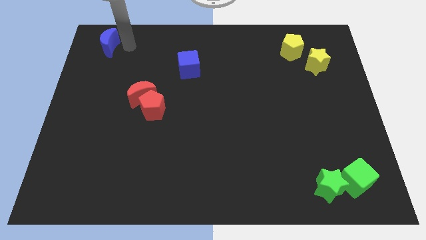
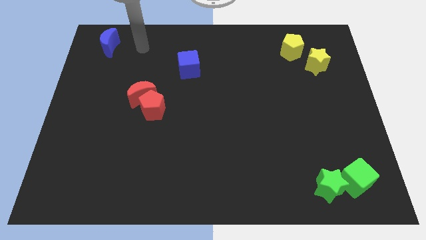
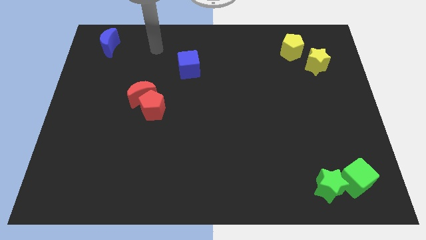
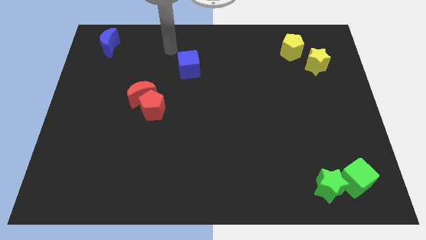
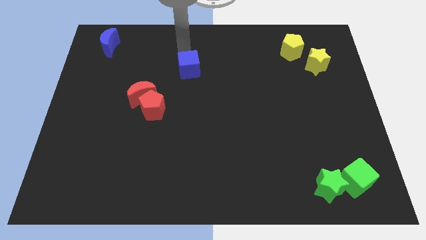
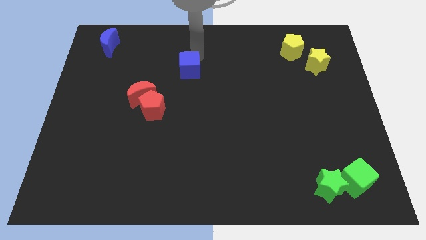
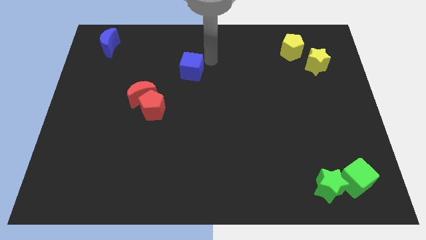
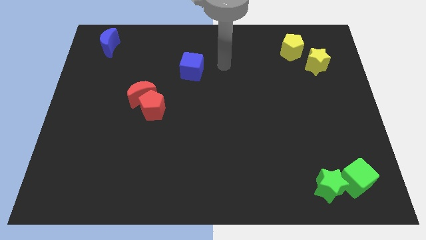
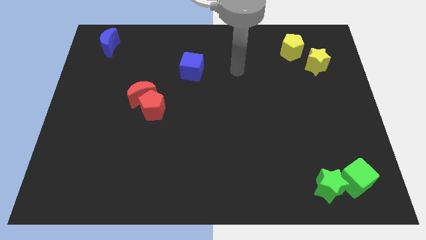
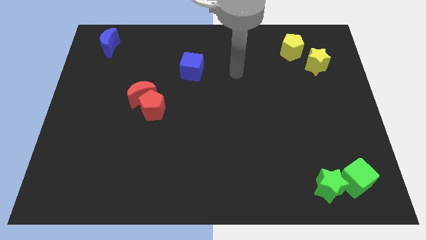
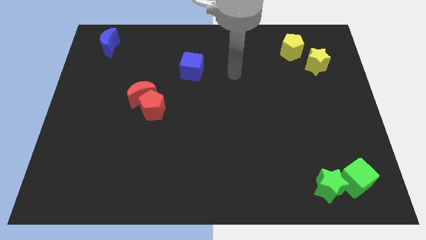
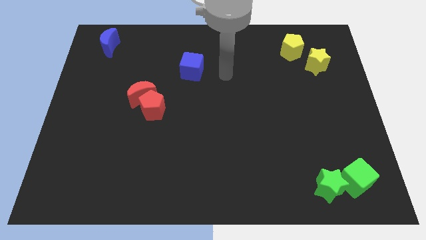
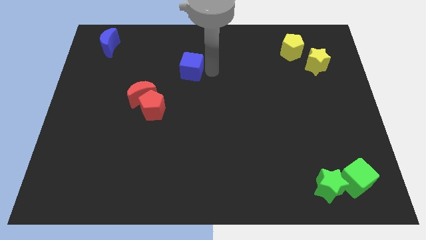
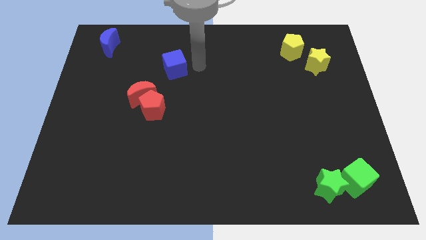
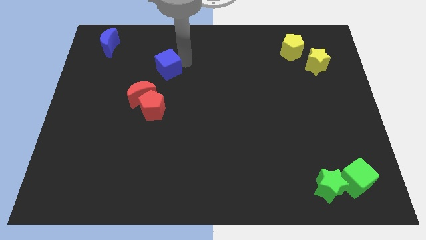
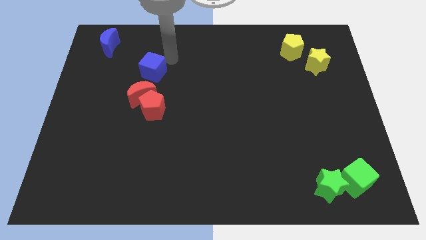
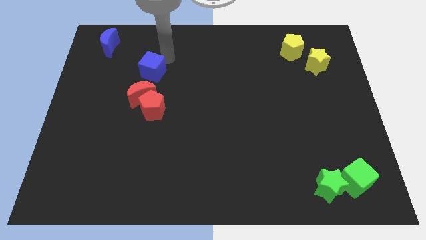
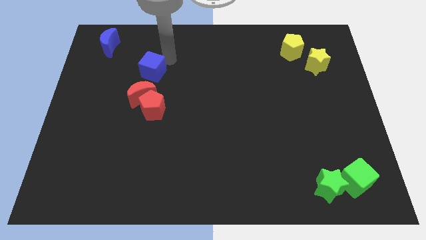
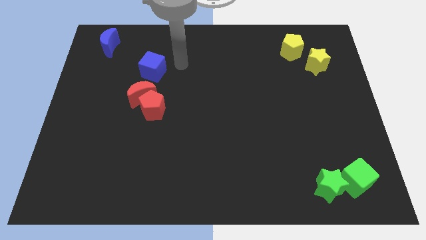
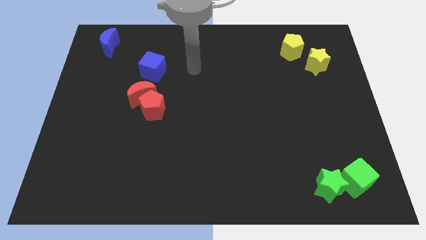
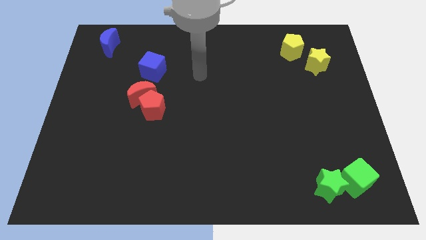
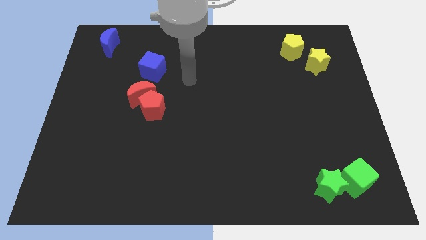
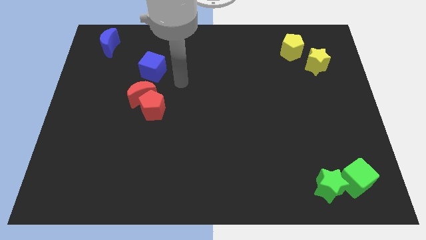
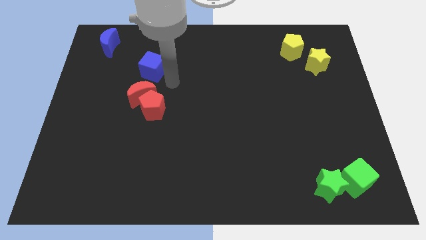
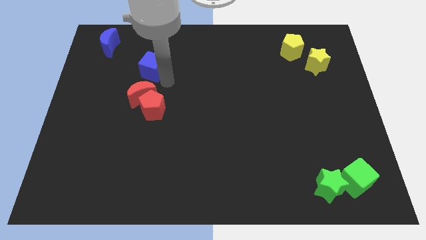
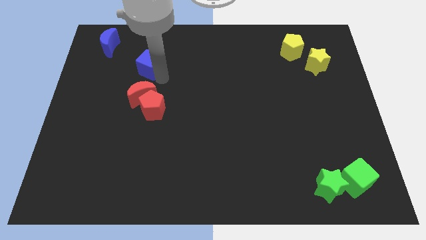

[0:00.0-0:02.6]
place blue cube above red moon

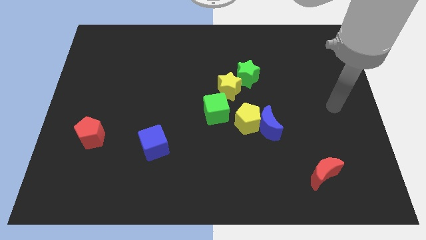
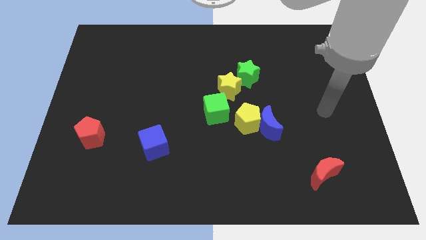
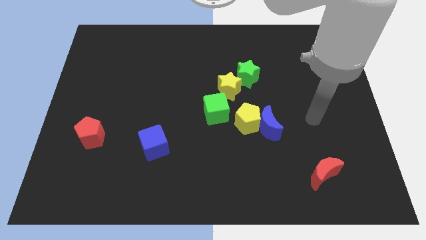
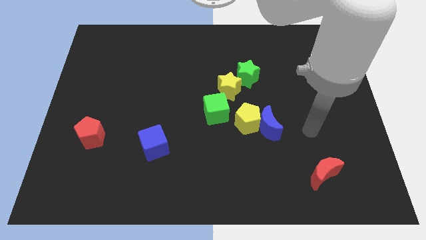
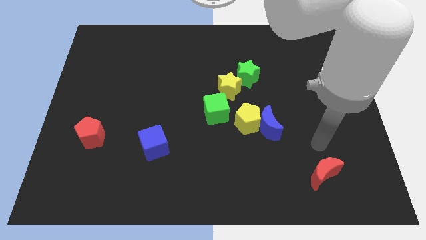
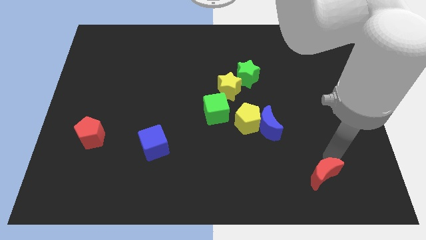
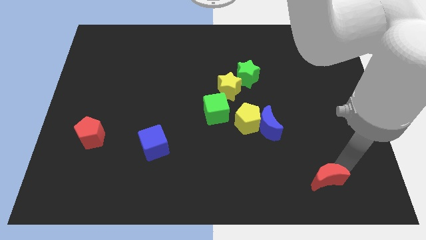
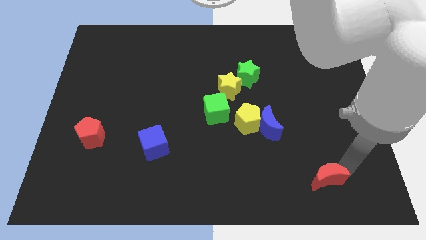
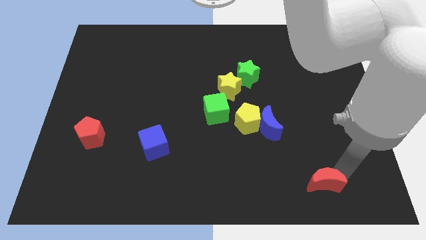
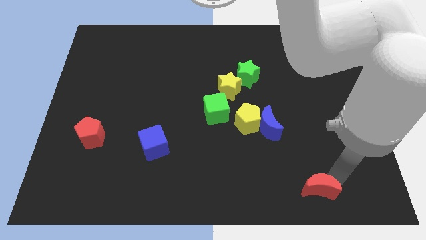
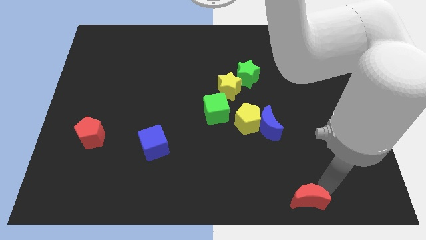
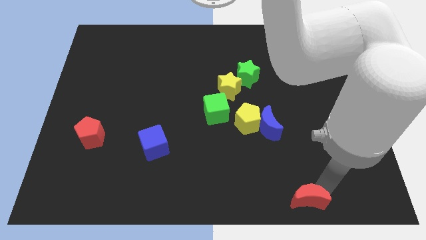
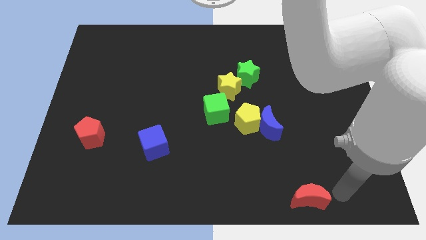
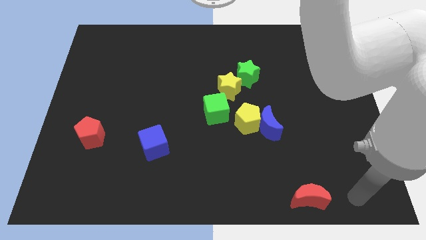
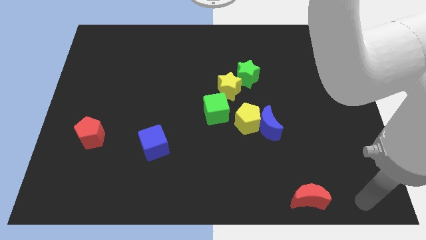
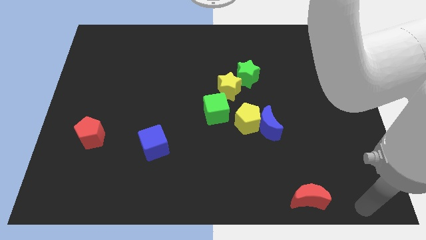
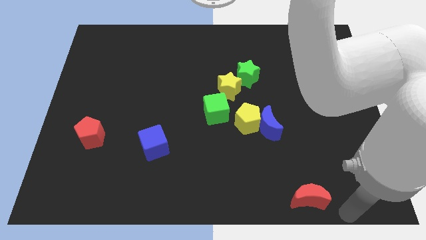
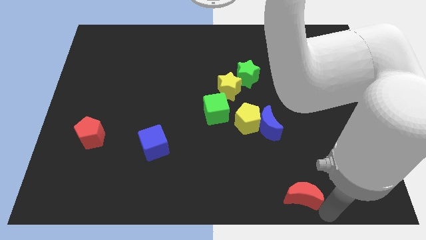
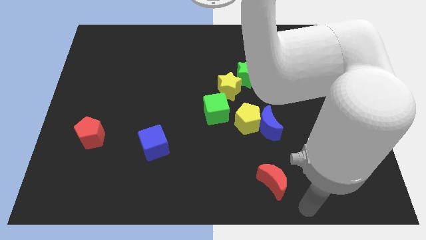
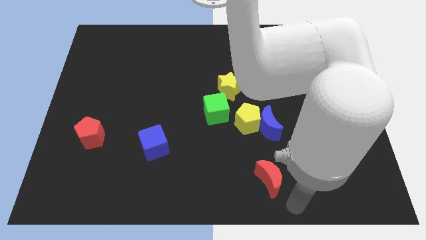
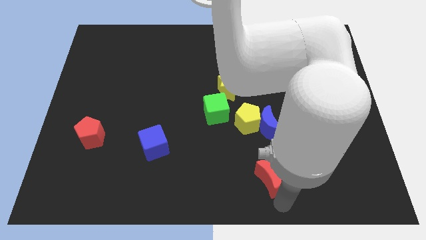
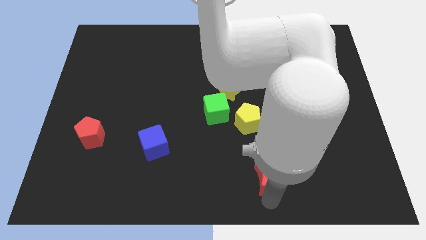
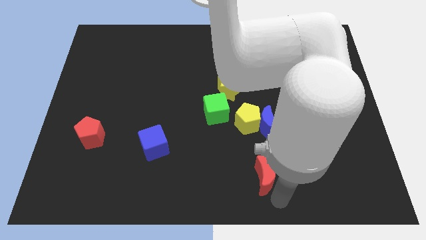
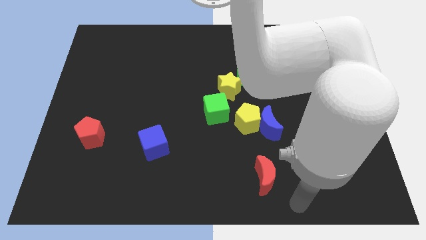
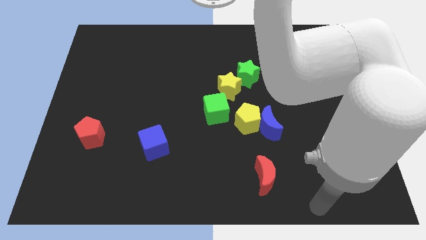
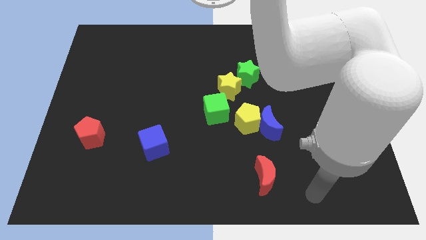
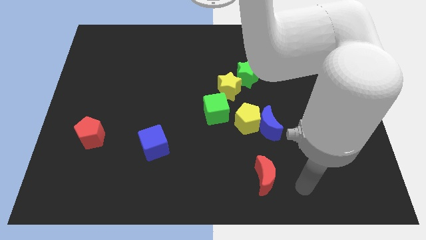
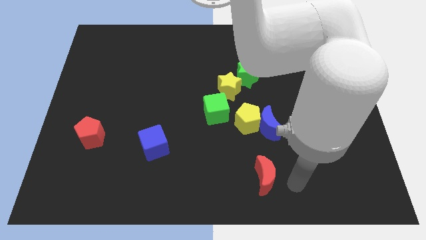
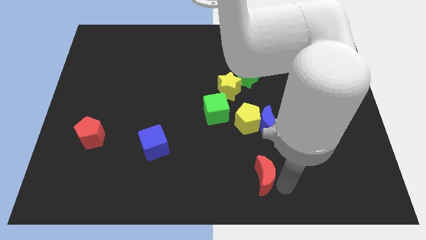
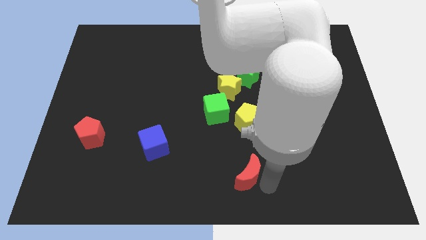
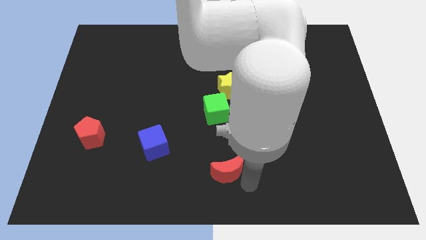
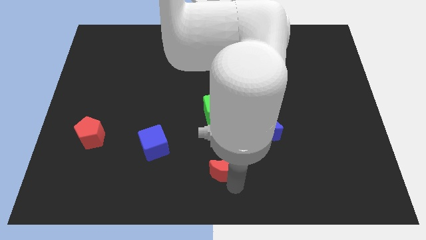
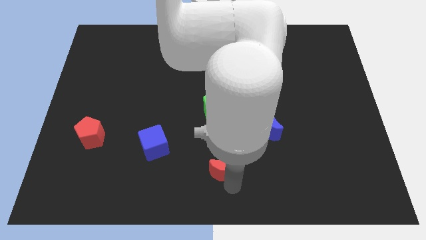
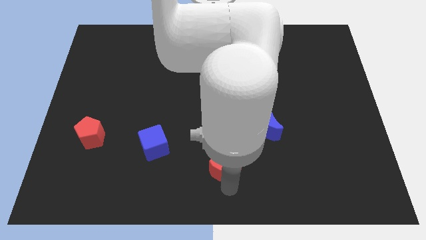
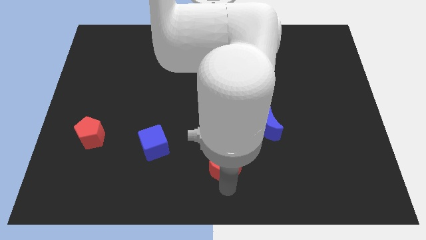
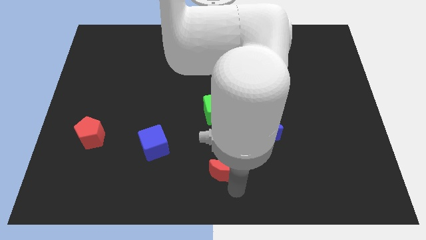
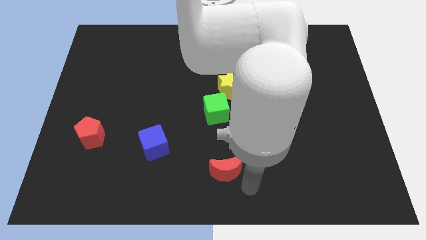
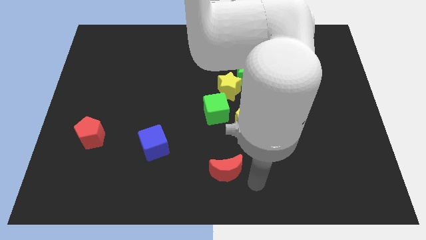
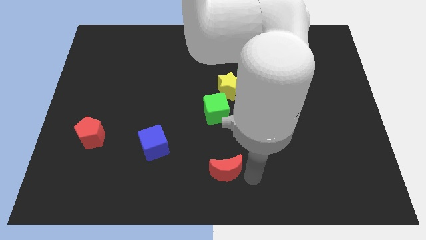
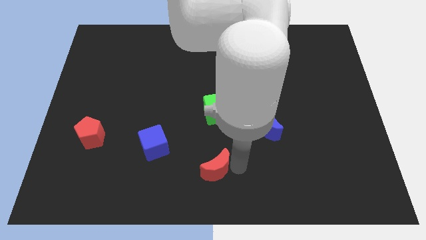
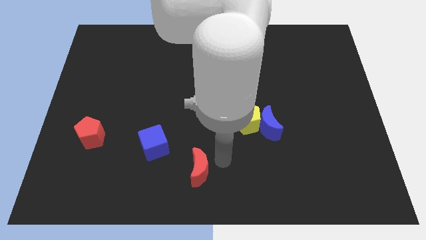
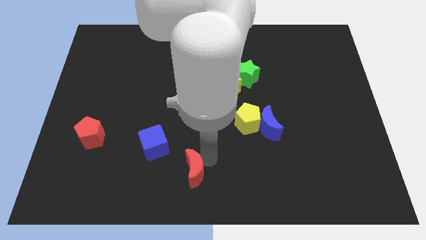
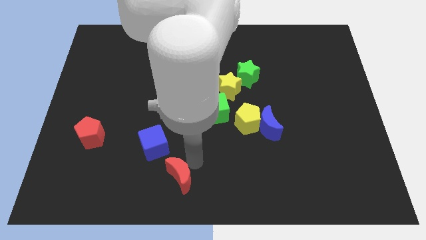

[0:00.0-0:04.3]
push the red crescent to the bottom right of the blue cube

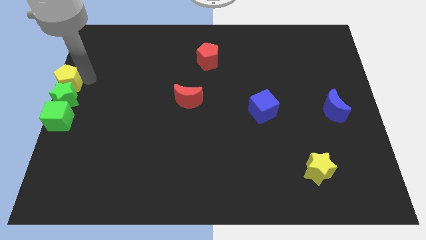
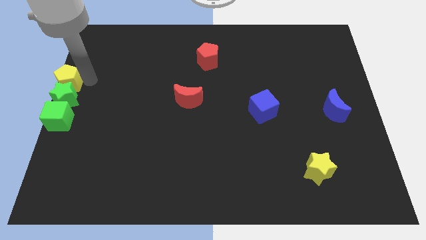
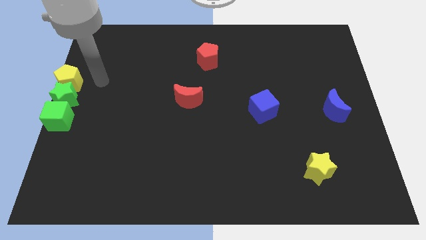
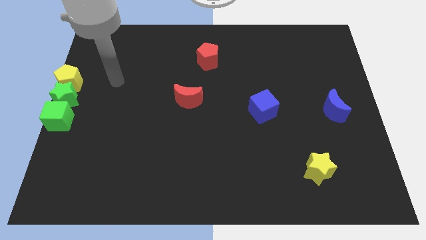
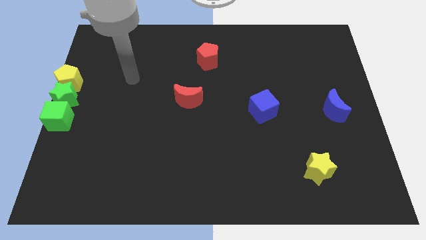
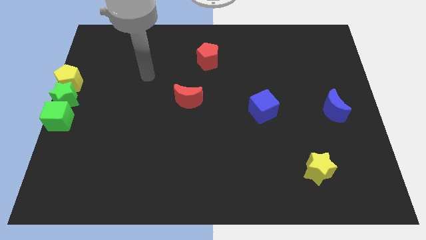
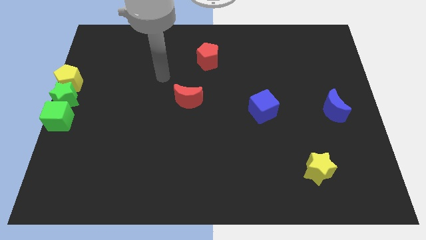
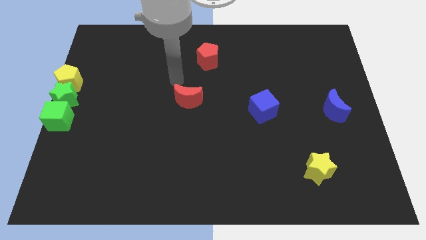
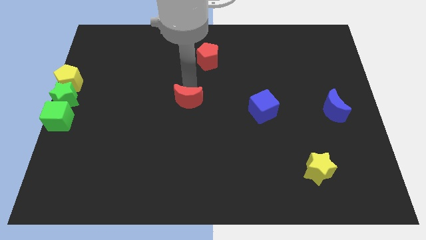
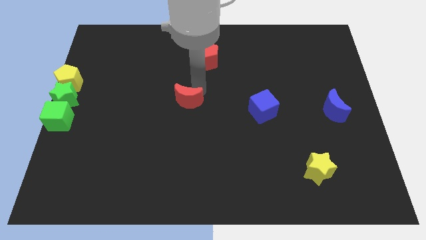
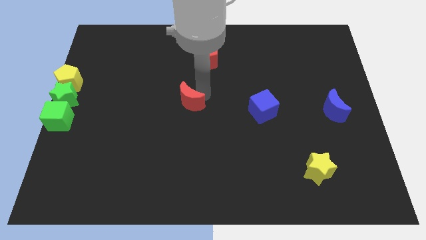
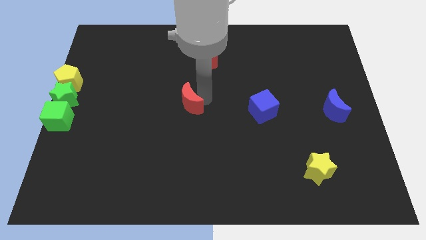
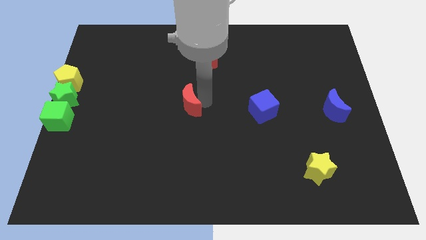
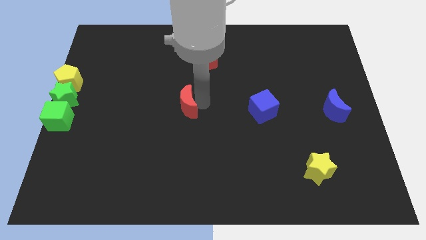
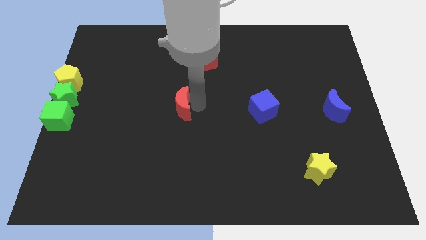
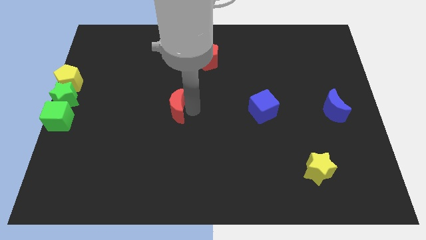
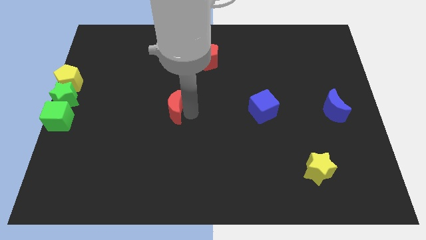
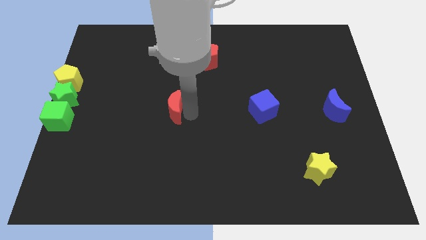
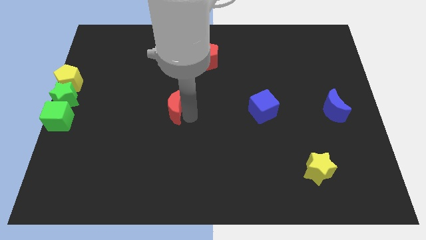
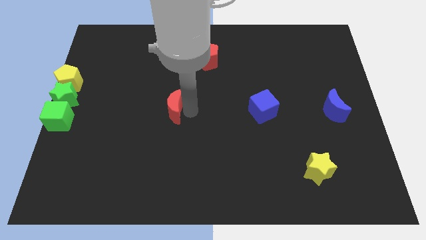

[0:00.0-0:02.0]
go and touch the red crescent
